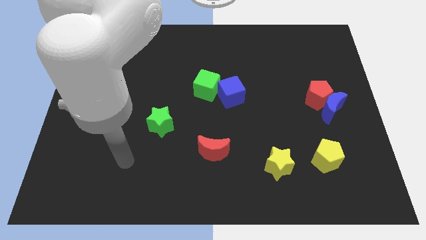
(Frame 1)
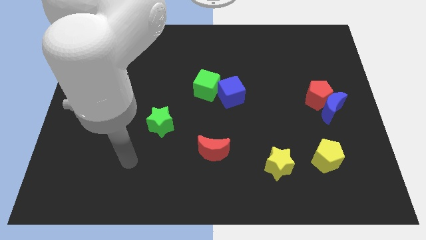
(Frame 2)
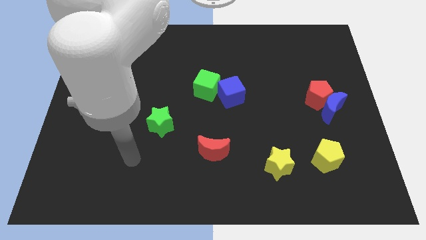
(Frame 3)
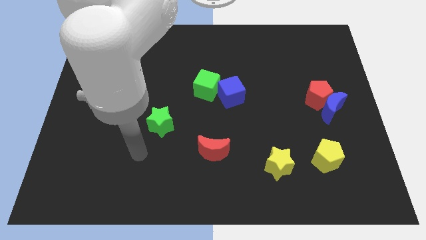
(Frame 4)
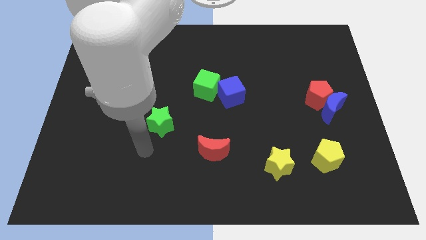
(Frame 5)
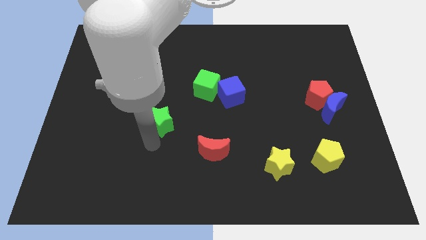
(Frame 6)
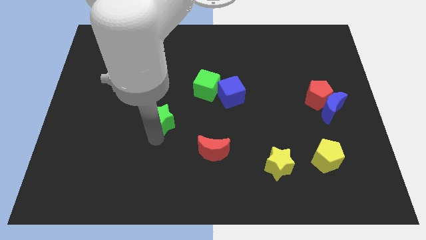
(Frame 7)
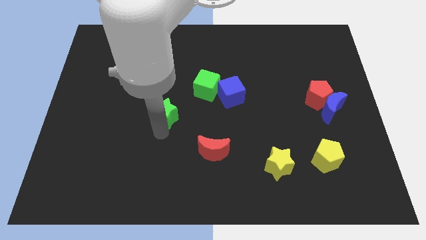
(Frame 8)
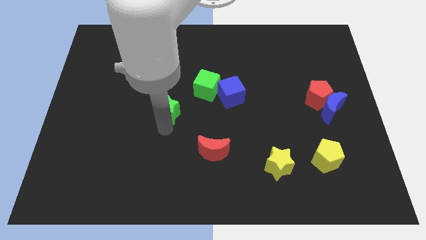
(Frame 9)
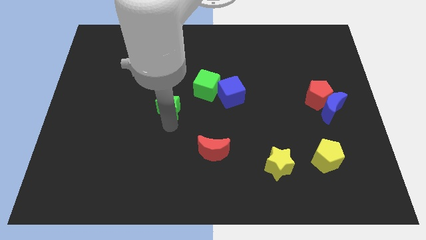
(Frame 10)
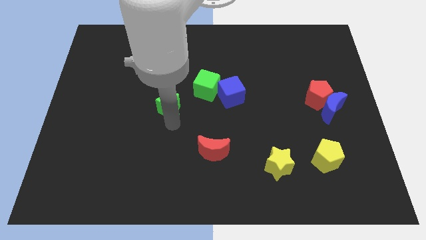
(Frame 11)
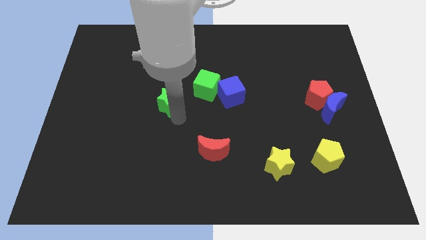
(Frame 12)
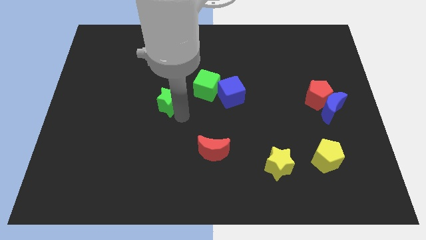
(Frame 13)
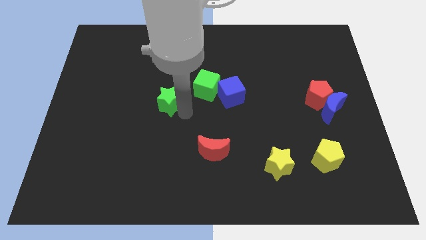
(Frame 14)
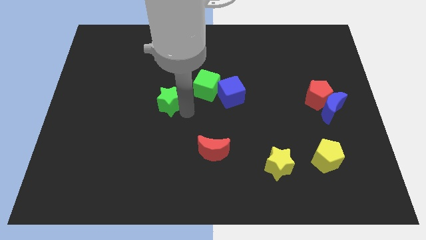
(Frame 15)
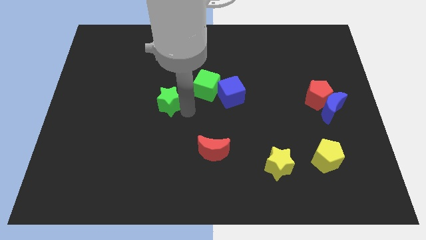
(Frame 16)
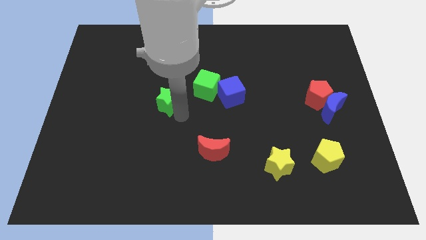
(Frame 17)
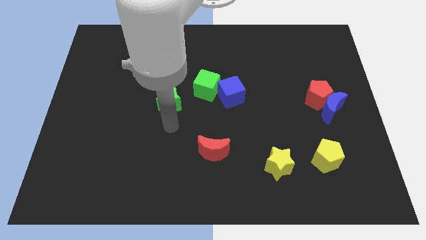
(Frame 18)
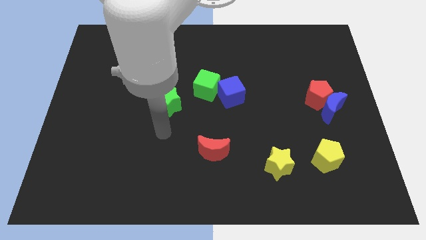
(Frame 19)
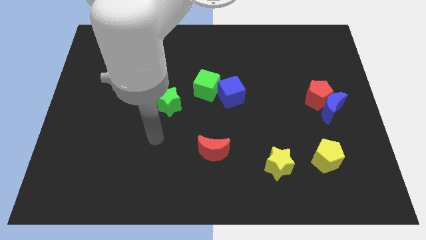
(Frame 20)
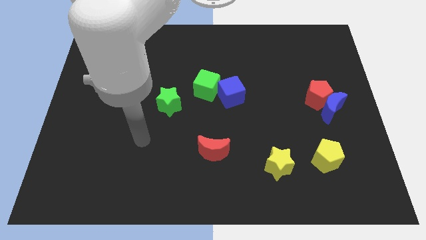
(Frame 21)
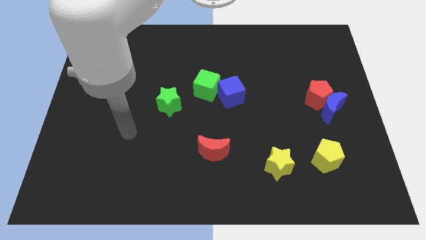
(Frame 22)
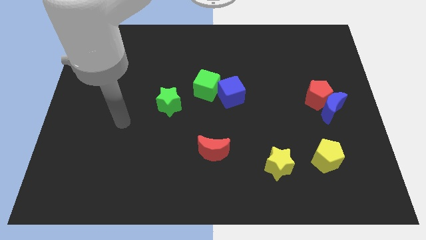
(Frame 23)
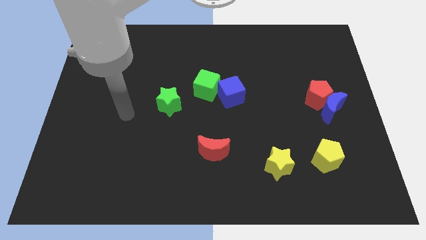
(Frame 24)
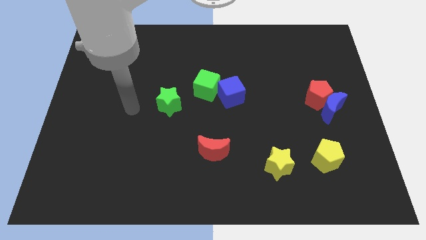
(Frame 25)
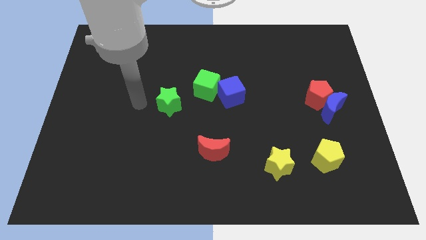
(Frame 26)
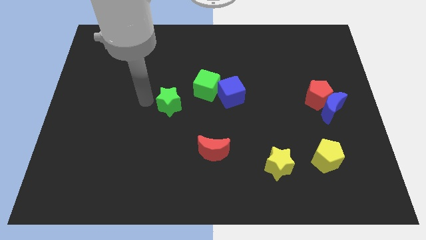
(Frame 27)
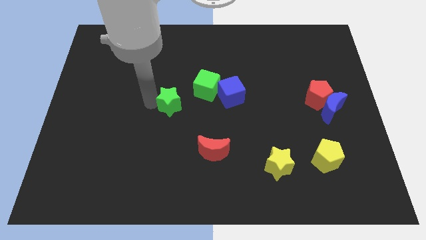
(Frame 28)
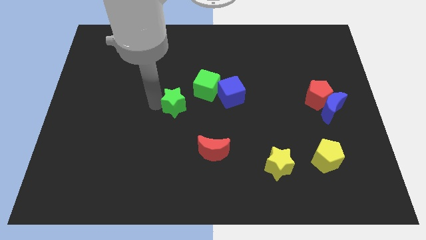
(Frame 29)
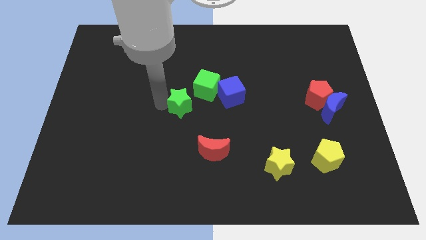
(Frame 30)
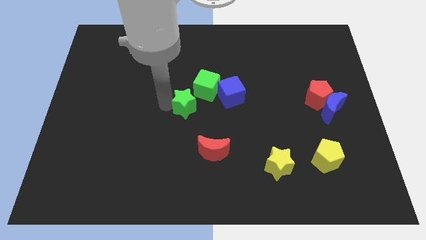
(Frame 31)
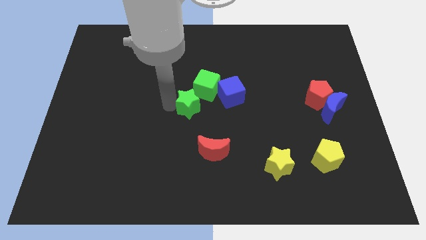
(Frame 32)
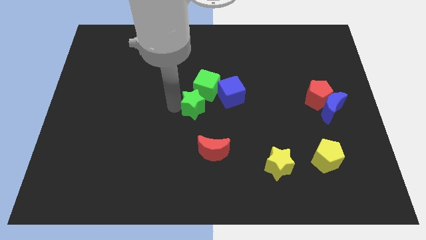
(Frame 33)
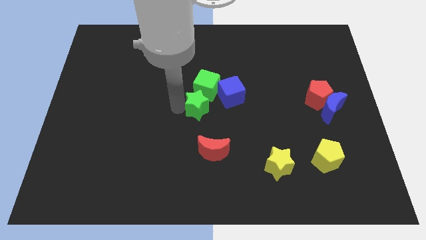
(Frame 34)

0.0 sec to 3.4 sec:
place green star in the center

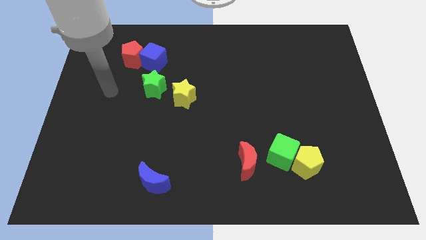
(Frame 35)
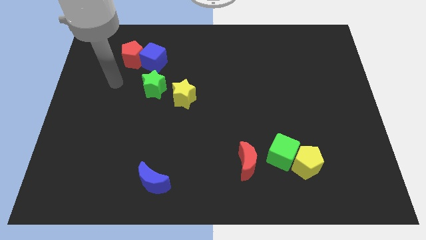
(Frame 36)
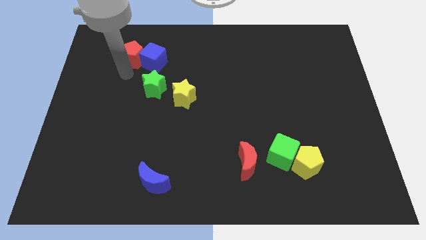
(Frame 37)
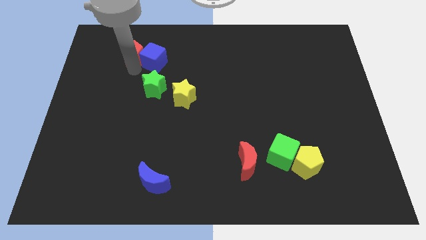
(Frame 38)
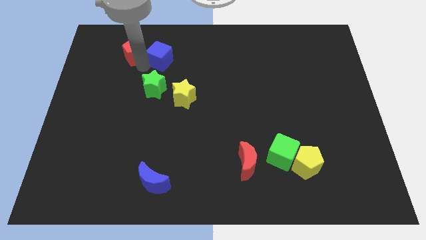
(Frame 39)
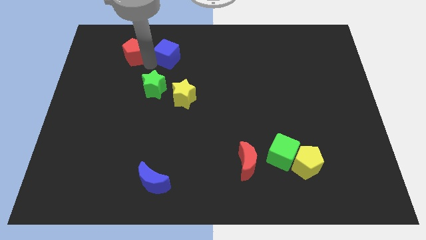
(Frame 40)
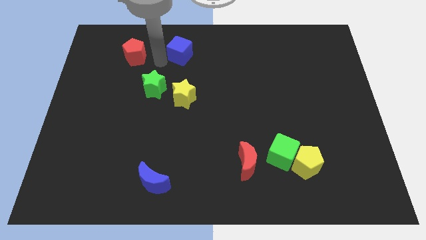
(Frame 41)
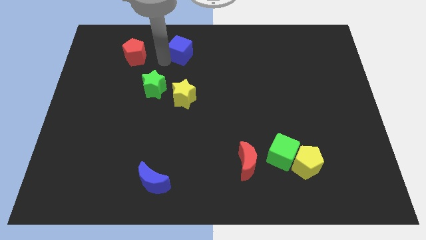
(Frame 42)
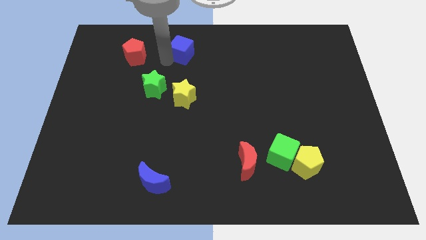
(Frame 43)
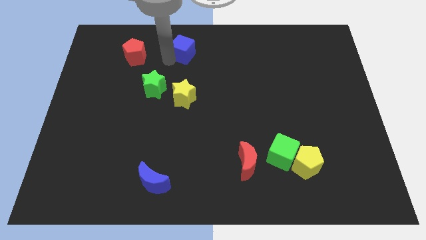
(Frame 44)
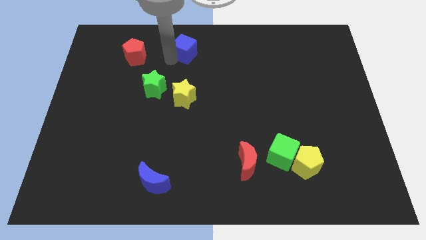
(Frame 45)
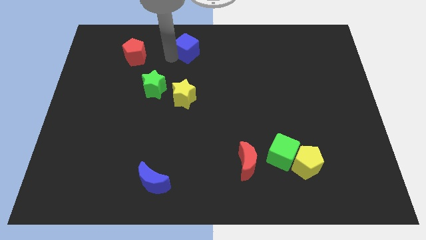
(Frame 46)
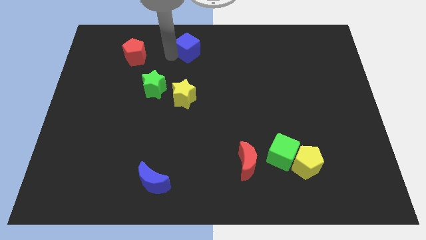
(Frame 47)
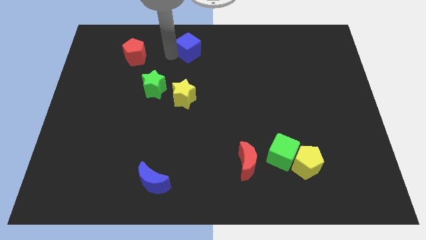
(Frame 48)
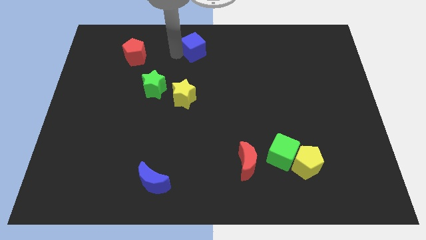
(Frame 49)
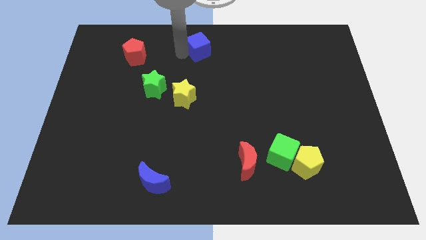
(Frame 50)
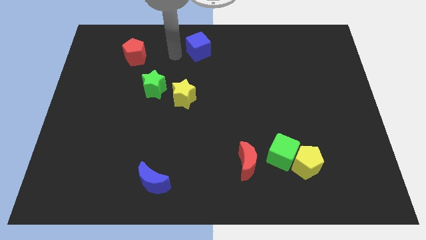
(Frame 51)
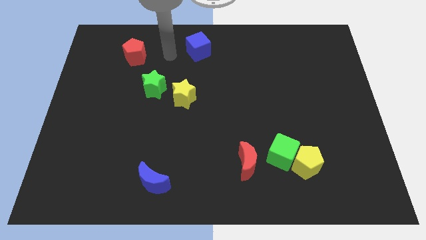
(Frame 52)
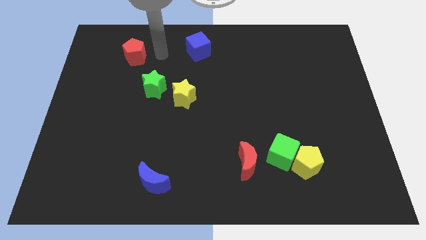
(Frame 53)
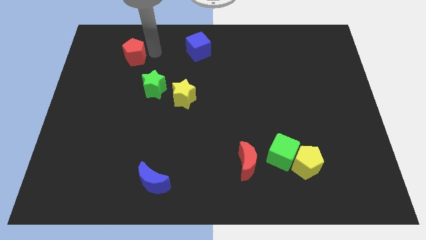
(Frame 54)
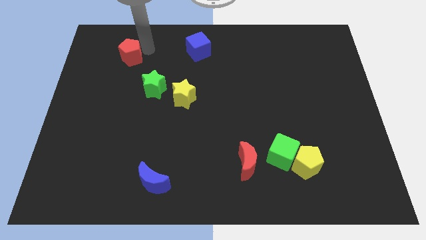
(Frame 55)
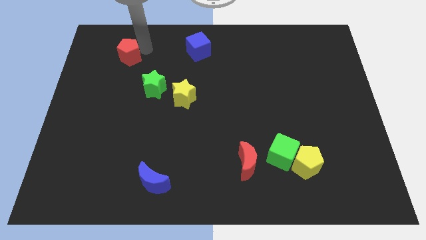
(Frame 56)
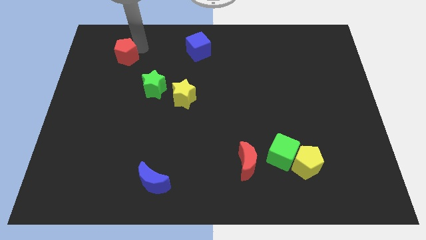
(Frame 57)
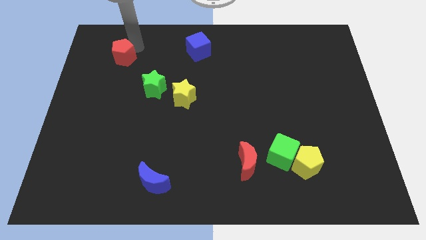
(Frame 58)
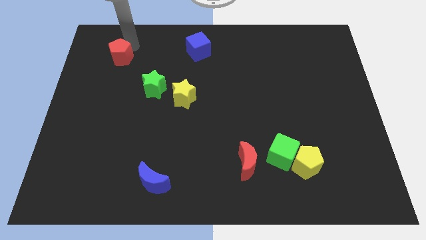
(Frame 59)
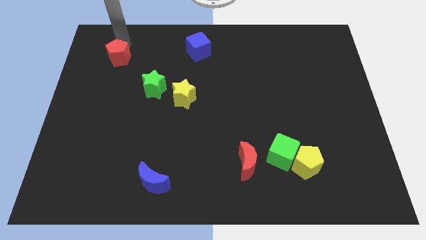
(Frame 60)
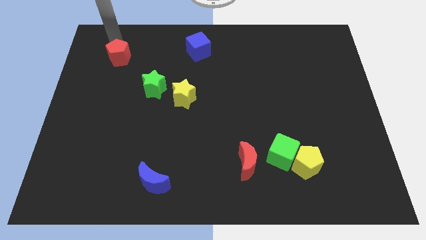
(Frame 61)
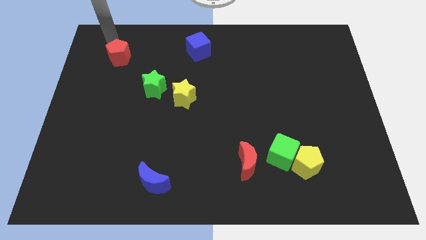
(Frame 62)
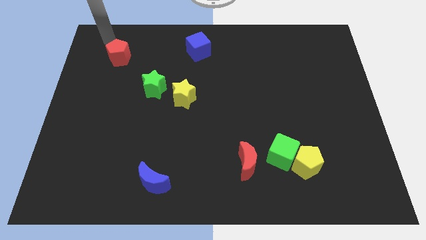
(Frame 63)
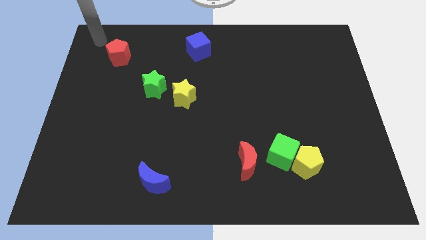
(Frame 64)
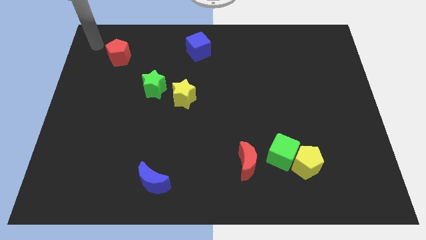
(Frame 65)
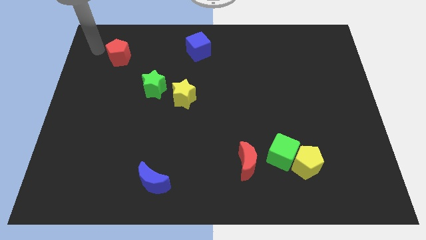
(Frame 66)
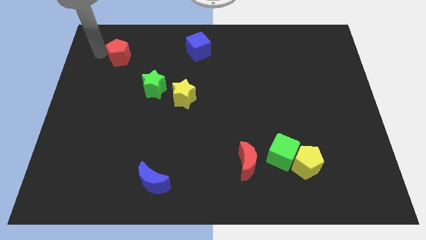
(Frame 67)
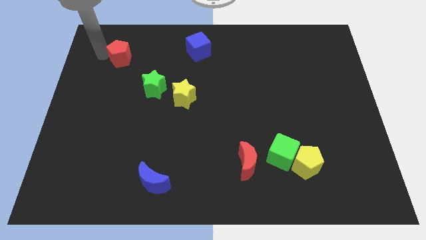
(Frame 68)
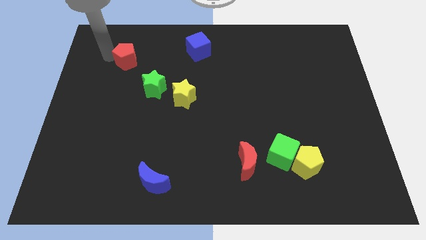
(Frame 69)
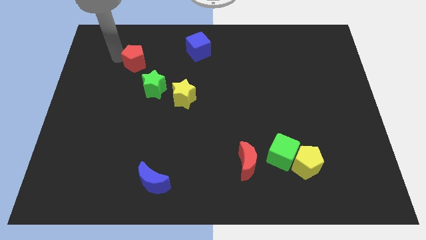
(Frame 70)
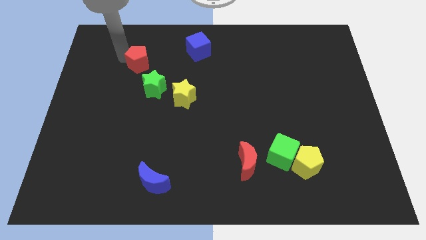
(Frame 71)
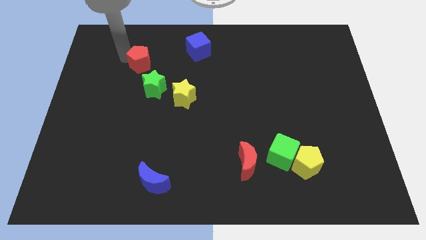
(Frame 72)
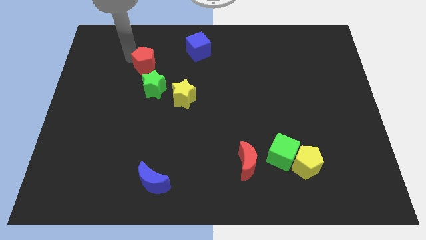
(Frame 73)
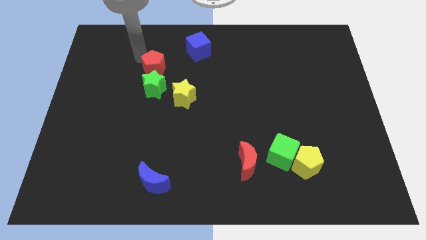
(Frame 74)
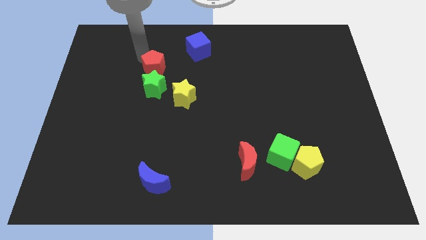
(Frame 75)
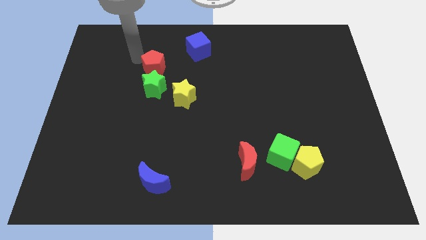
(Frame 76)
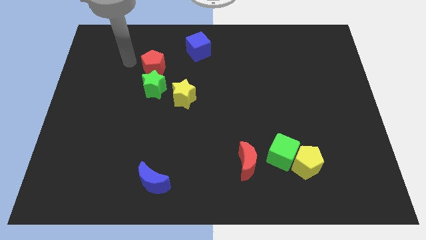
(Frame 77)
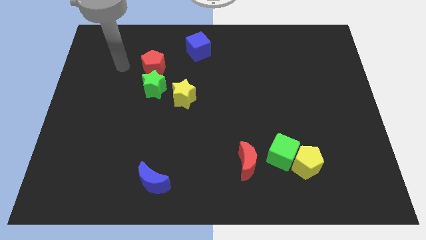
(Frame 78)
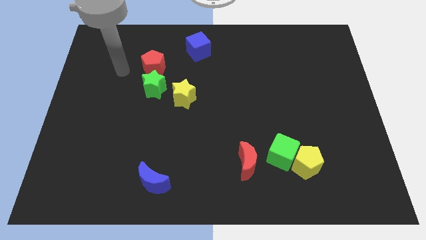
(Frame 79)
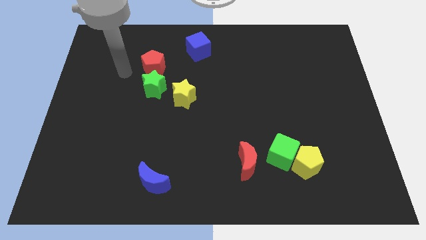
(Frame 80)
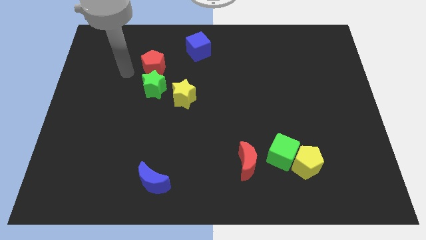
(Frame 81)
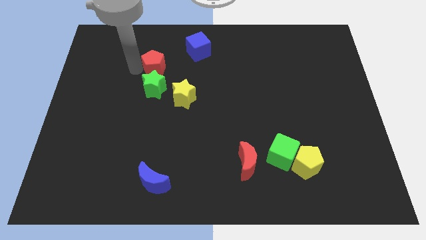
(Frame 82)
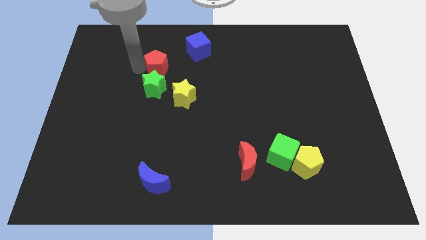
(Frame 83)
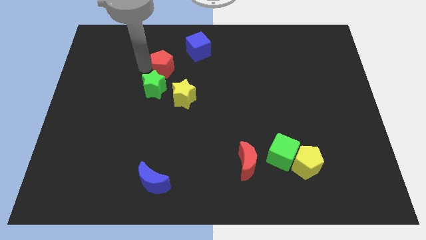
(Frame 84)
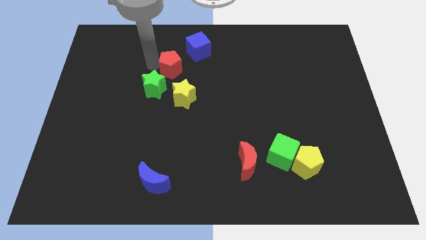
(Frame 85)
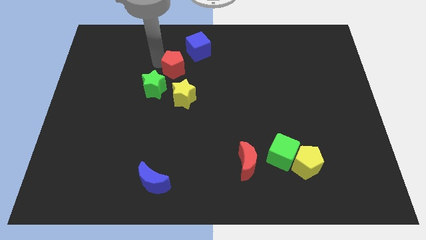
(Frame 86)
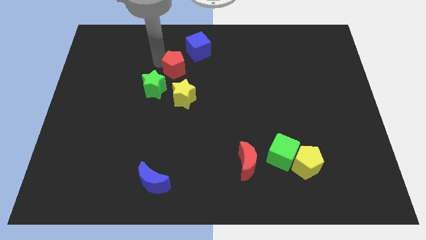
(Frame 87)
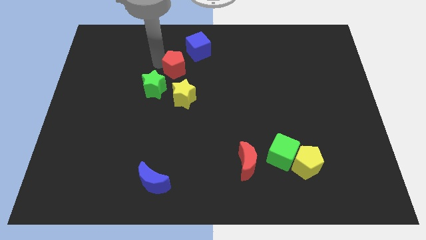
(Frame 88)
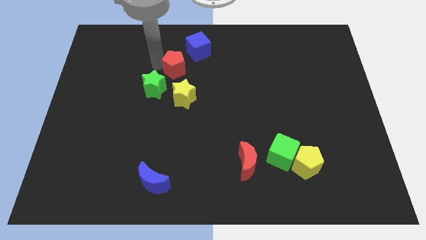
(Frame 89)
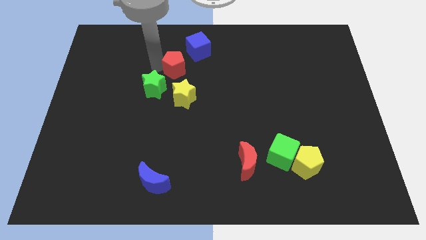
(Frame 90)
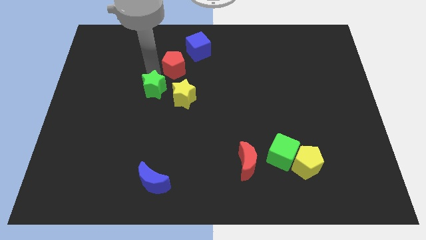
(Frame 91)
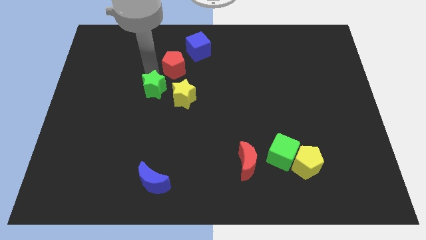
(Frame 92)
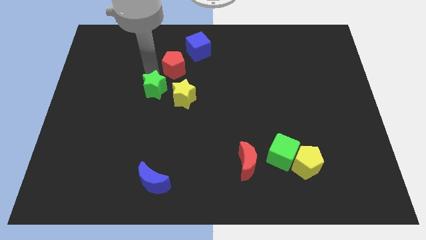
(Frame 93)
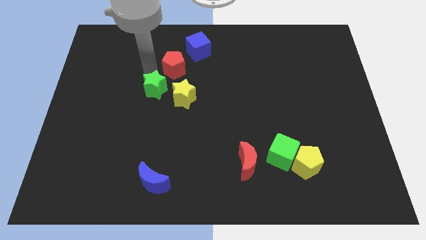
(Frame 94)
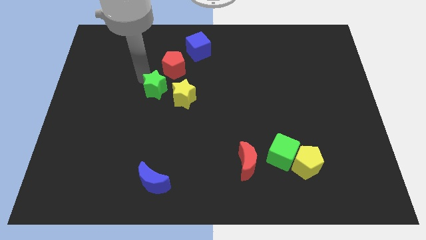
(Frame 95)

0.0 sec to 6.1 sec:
place the red pentagon at the top right side of the green star
